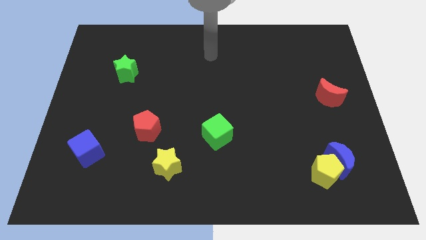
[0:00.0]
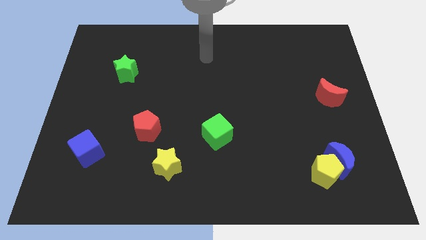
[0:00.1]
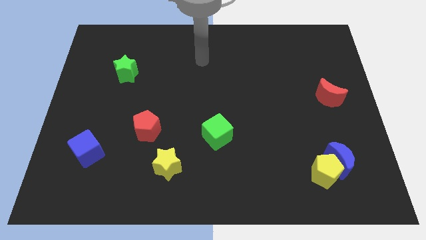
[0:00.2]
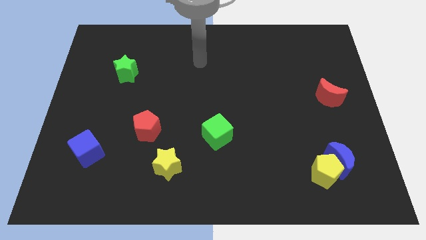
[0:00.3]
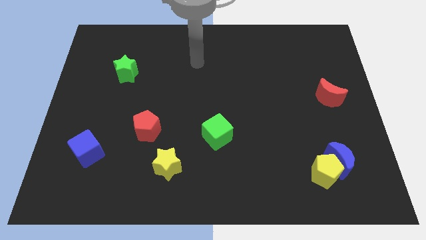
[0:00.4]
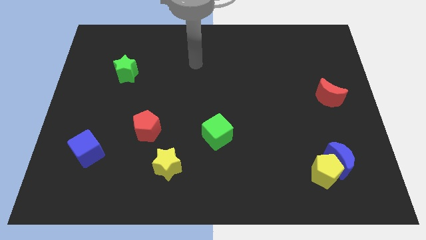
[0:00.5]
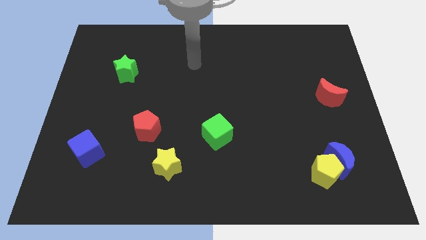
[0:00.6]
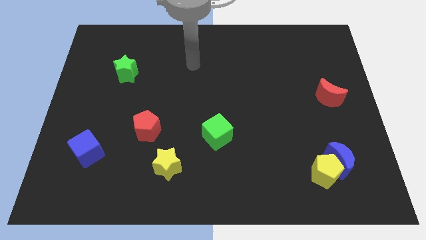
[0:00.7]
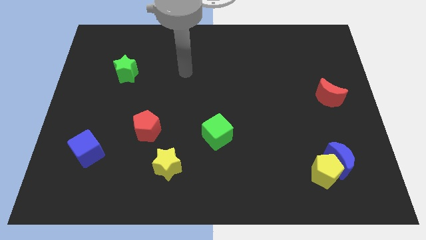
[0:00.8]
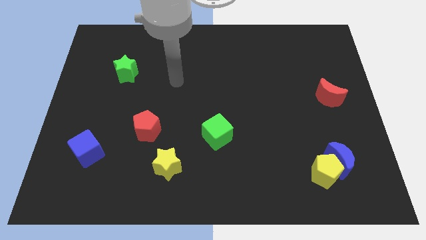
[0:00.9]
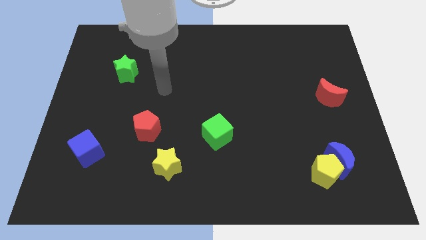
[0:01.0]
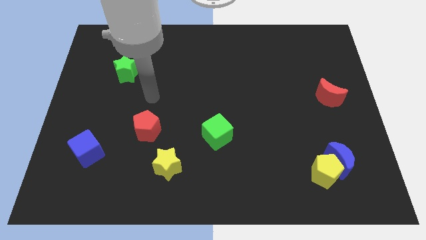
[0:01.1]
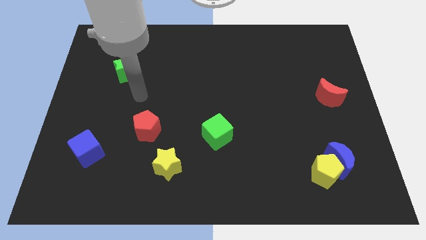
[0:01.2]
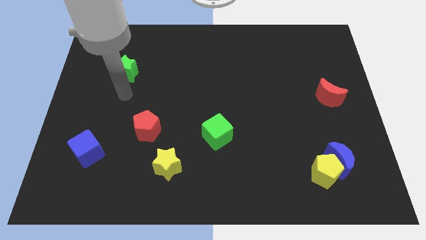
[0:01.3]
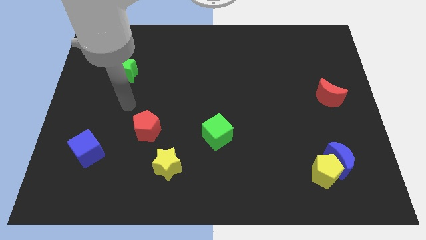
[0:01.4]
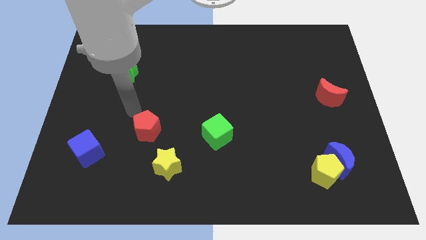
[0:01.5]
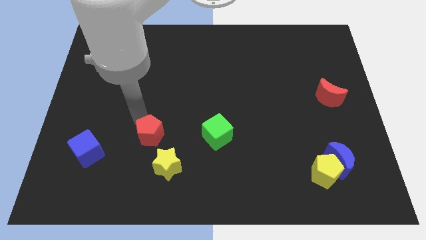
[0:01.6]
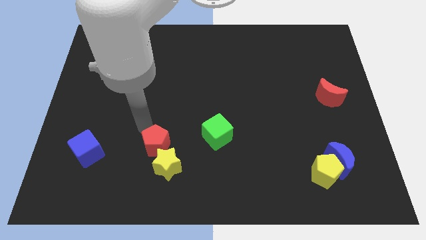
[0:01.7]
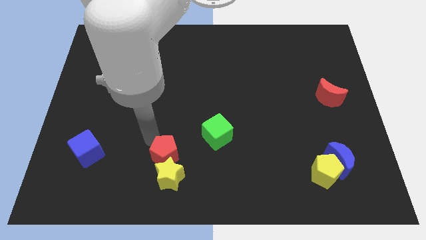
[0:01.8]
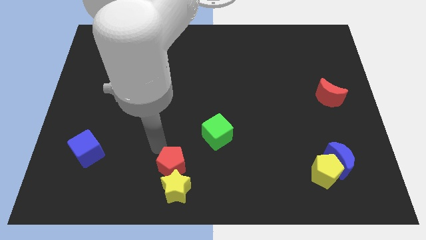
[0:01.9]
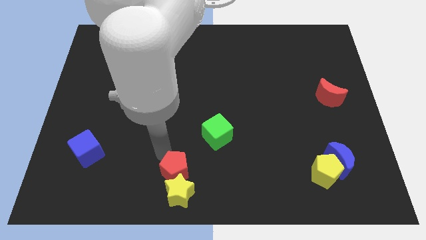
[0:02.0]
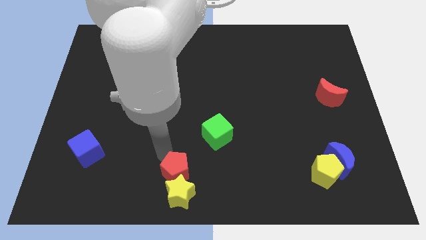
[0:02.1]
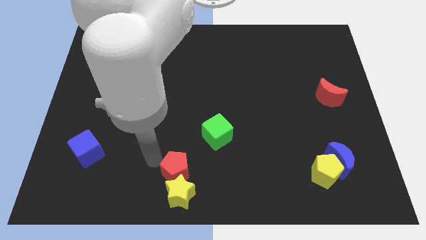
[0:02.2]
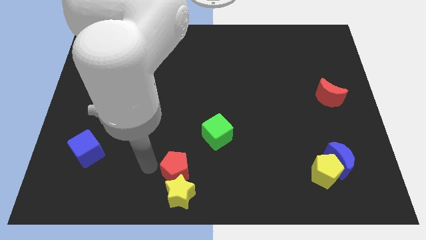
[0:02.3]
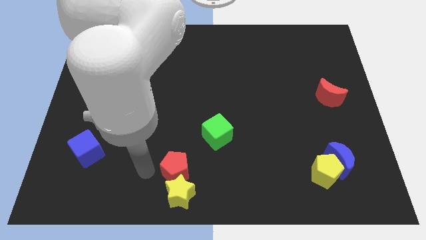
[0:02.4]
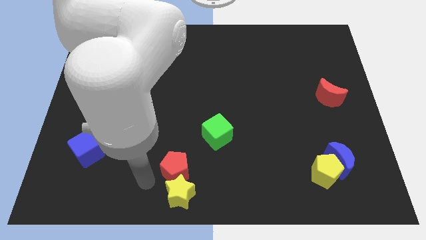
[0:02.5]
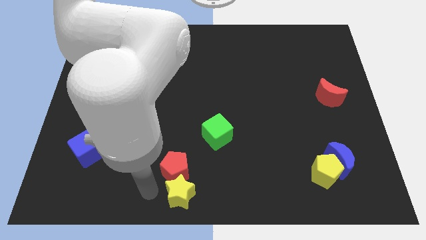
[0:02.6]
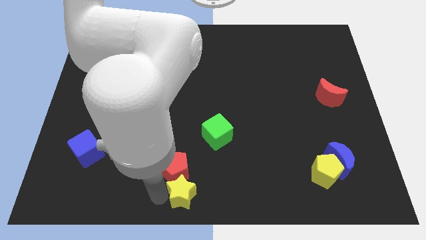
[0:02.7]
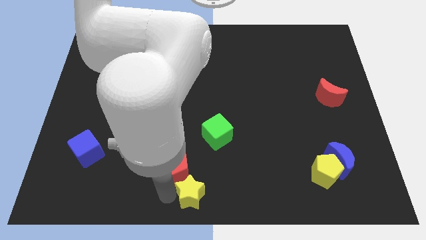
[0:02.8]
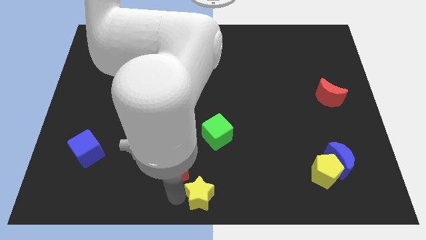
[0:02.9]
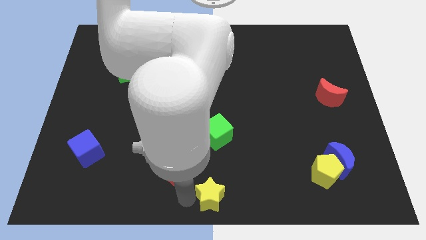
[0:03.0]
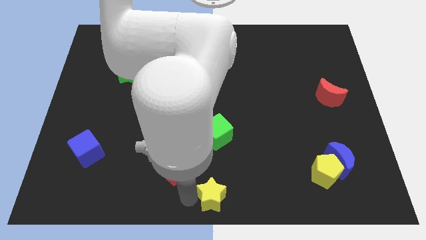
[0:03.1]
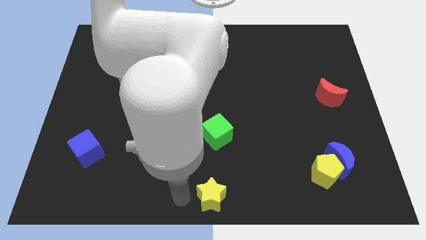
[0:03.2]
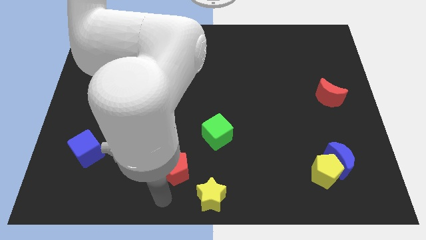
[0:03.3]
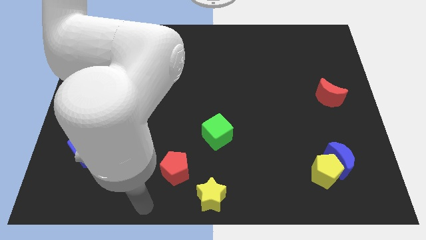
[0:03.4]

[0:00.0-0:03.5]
move the star to the bottom middle of the board

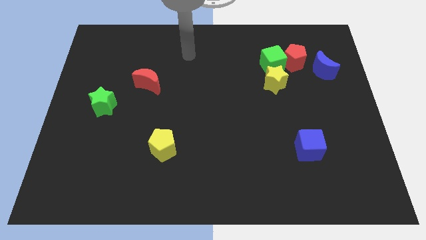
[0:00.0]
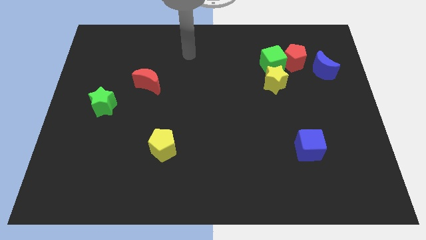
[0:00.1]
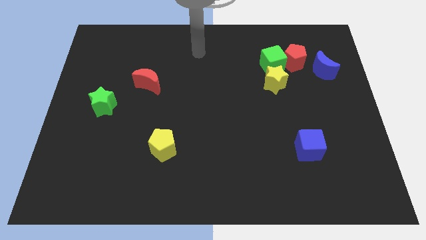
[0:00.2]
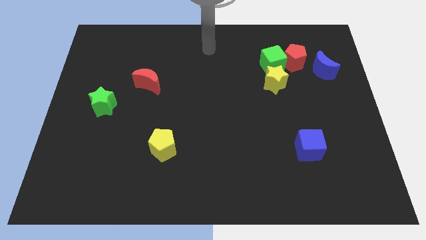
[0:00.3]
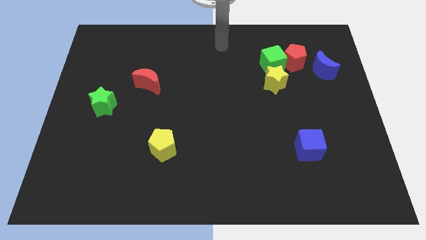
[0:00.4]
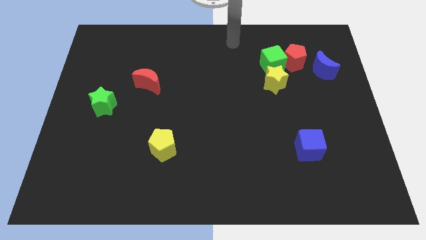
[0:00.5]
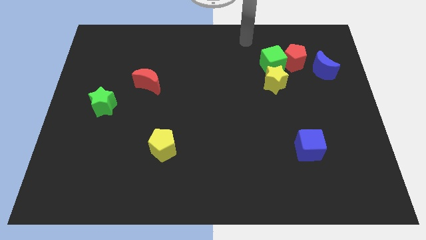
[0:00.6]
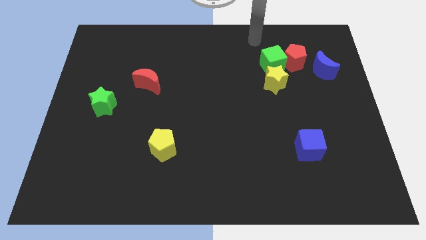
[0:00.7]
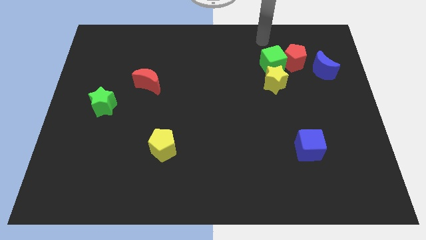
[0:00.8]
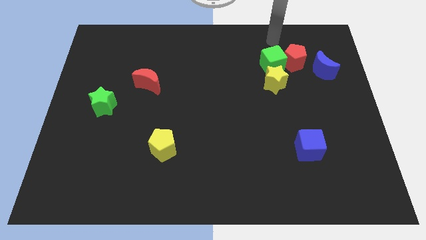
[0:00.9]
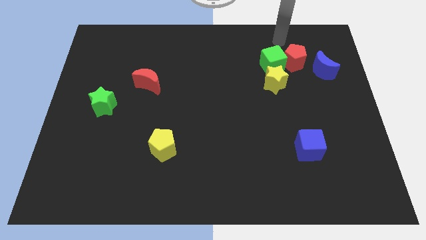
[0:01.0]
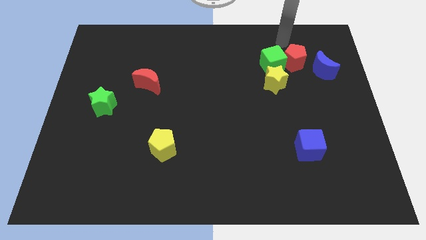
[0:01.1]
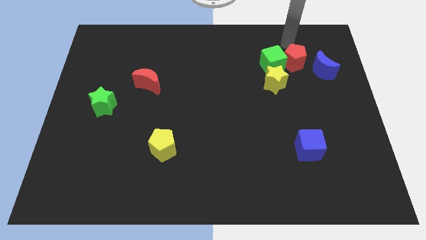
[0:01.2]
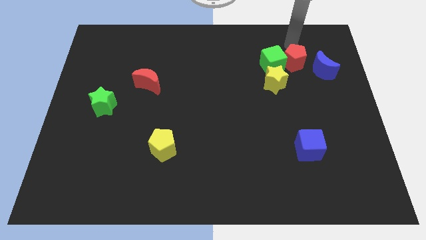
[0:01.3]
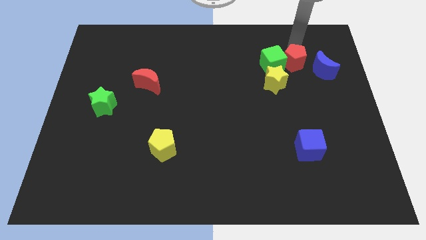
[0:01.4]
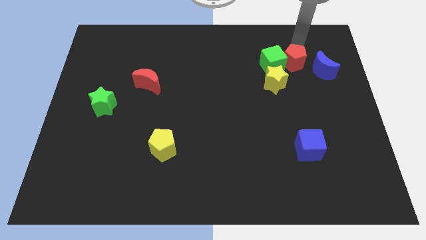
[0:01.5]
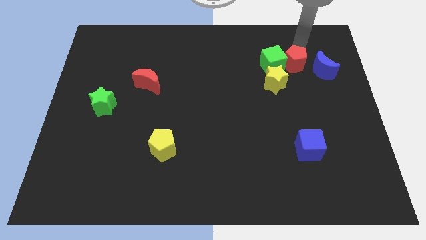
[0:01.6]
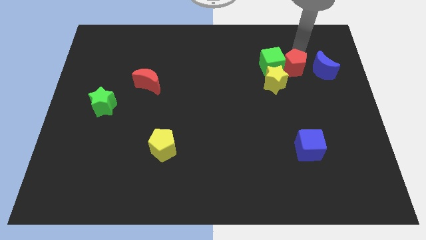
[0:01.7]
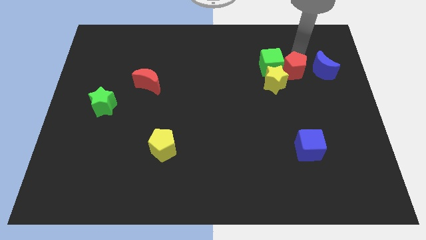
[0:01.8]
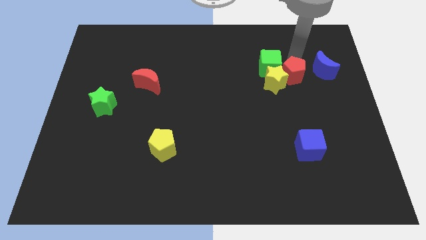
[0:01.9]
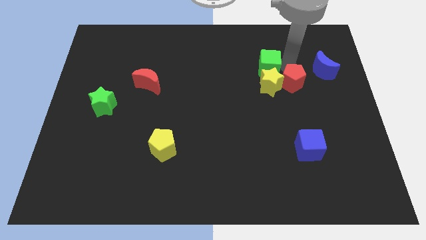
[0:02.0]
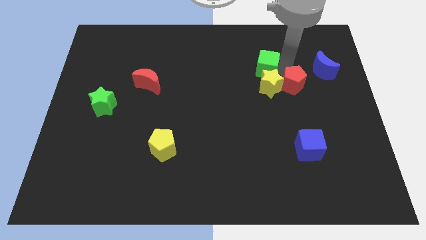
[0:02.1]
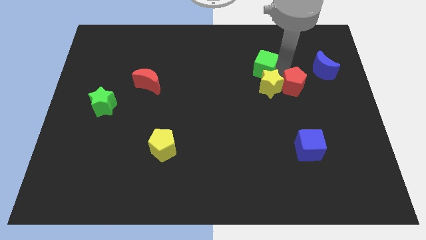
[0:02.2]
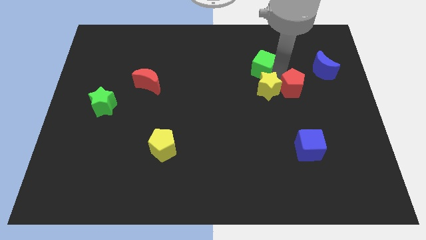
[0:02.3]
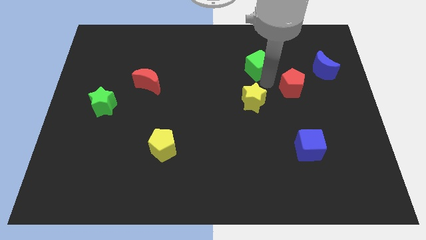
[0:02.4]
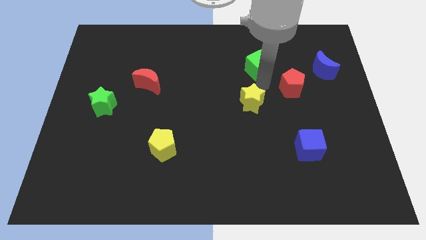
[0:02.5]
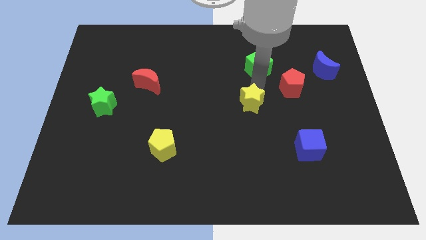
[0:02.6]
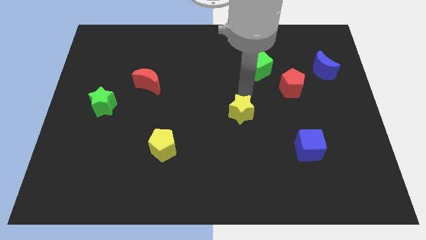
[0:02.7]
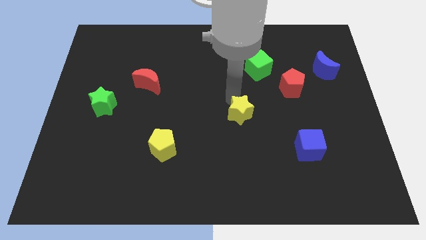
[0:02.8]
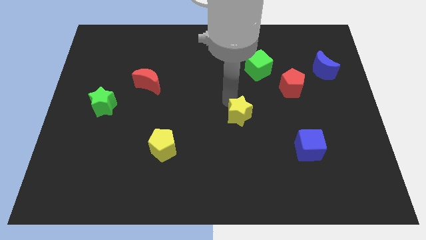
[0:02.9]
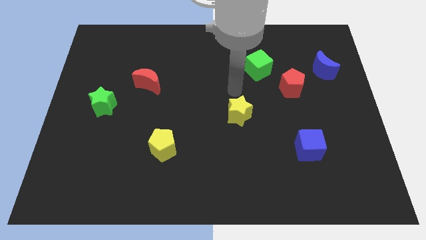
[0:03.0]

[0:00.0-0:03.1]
push the green cube red pentagon and yellow star towards the bottom side of the board

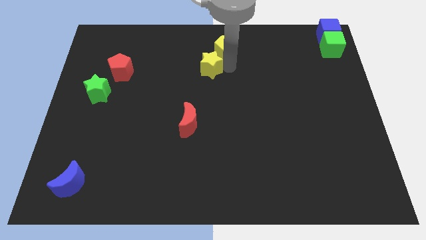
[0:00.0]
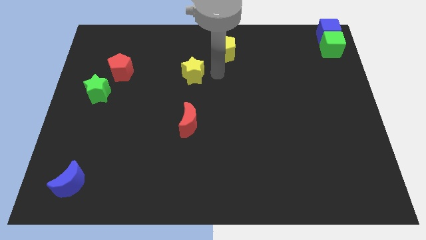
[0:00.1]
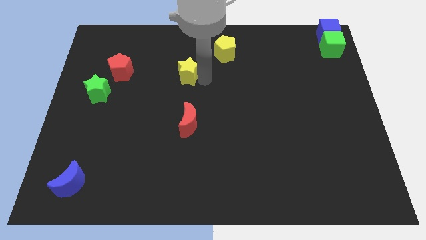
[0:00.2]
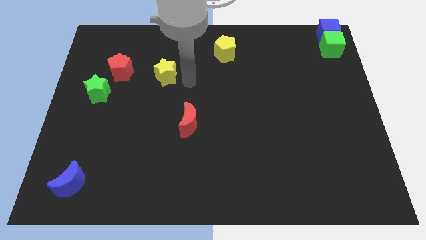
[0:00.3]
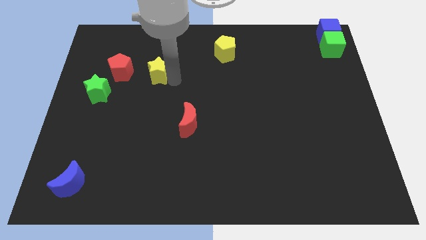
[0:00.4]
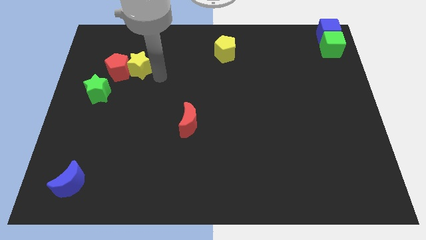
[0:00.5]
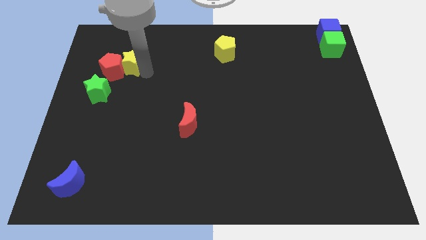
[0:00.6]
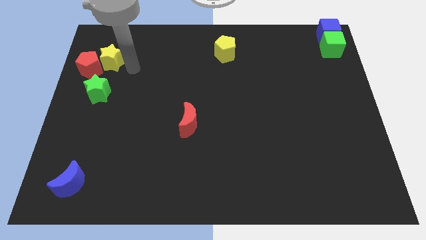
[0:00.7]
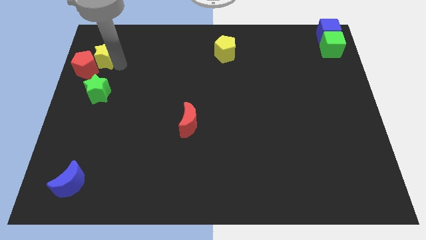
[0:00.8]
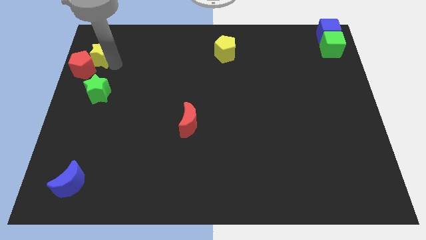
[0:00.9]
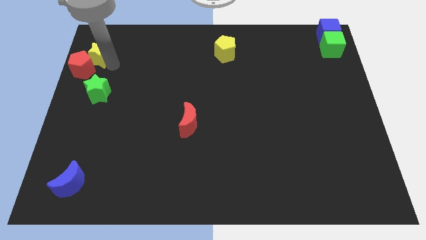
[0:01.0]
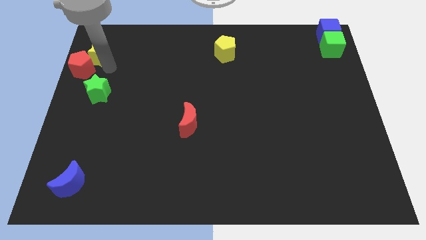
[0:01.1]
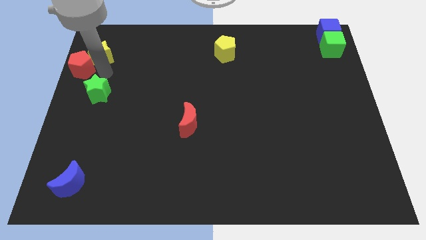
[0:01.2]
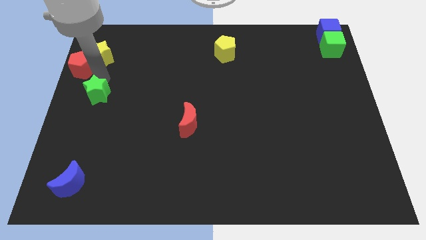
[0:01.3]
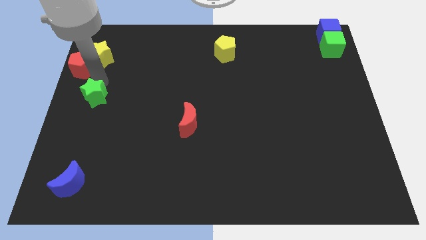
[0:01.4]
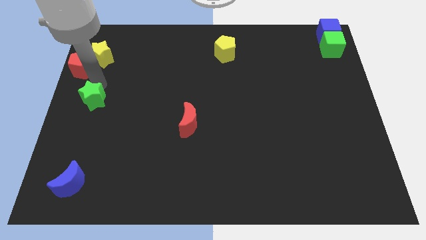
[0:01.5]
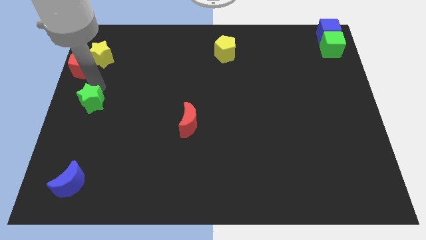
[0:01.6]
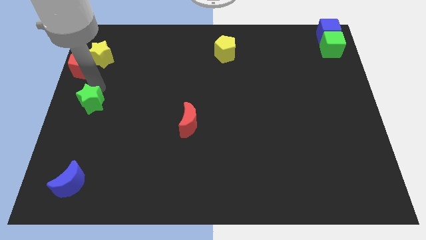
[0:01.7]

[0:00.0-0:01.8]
separate the yellow star from the yellow pentagon

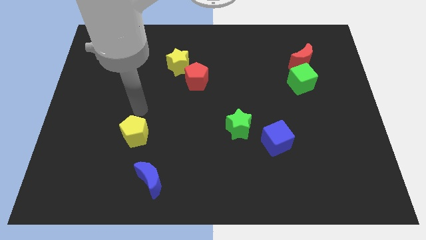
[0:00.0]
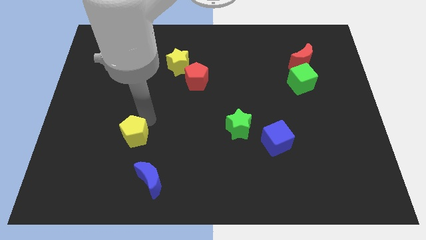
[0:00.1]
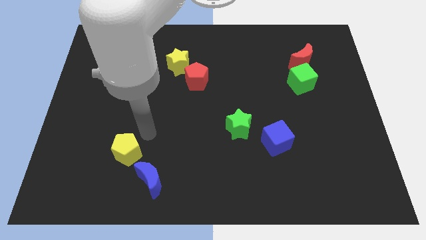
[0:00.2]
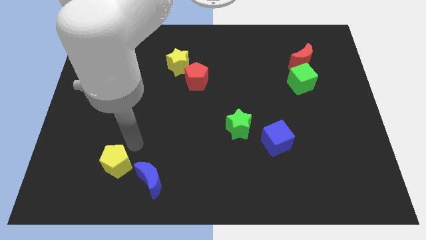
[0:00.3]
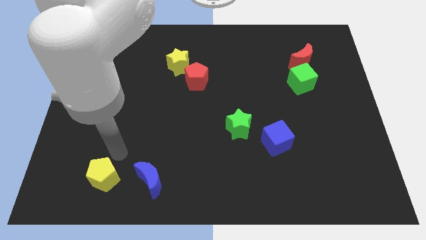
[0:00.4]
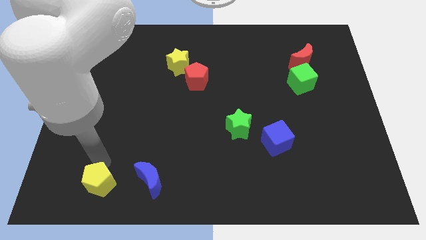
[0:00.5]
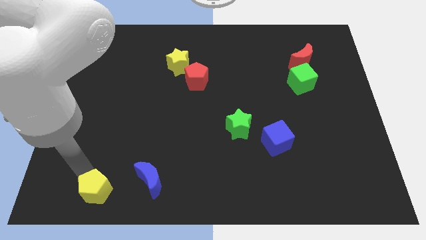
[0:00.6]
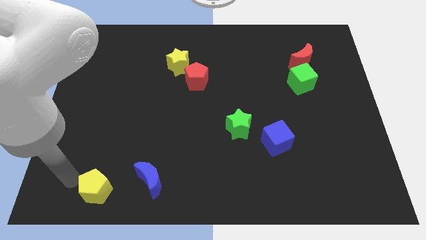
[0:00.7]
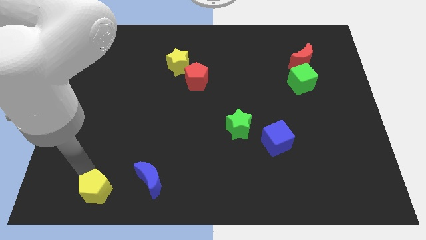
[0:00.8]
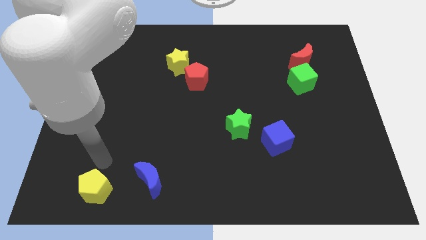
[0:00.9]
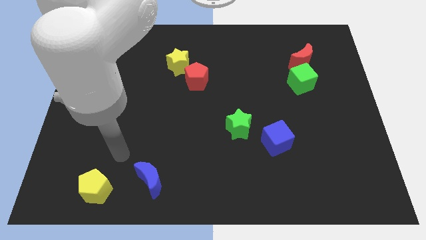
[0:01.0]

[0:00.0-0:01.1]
push the yellow pentagon parallel to the left of blue moon
